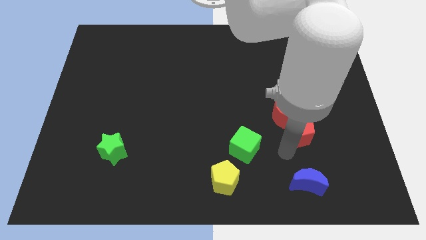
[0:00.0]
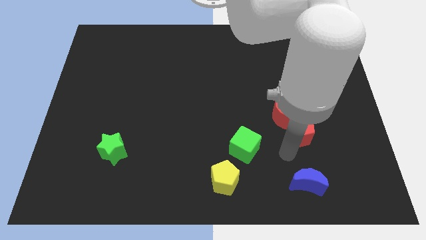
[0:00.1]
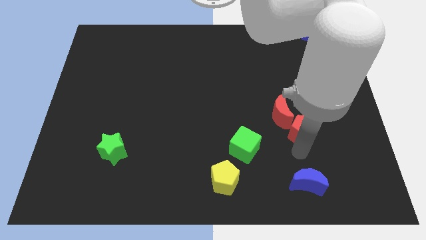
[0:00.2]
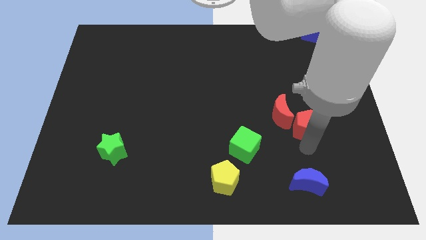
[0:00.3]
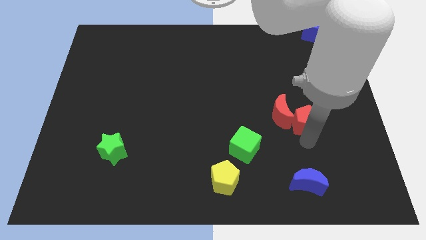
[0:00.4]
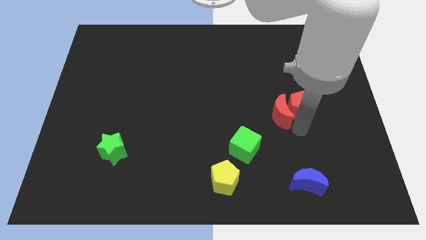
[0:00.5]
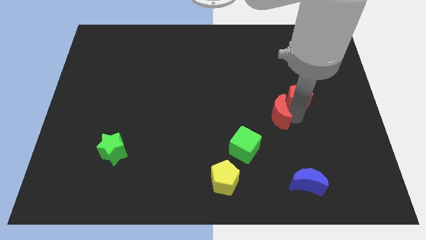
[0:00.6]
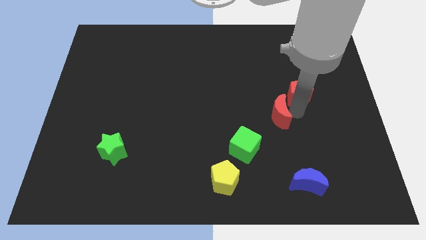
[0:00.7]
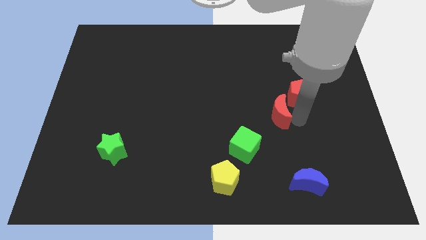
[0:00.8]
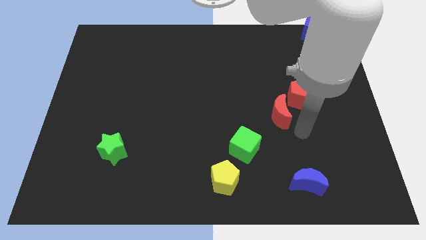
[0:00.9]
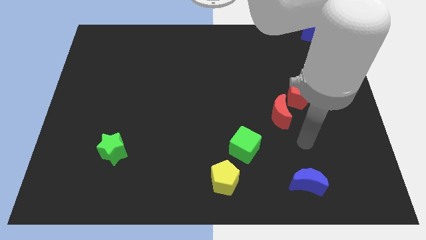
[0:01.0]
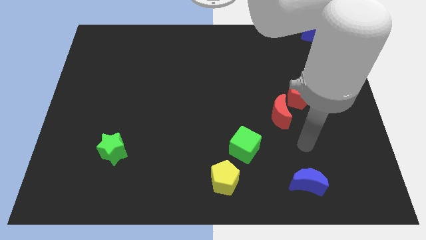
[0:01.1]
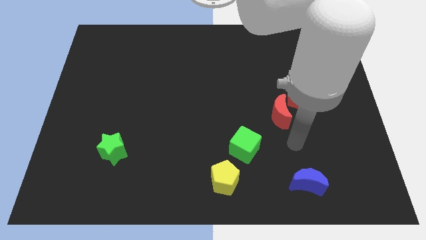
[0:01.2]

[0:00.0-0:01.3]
reposition the red pentagon

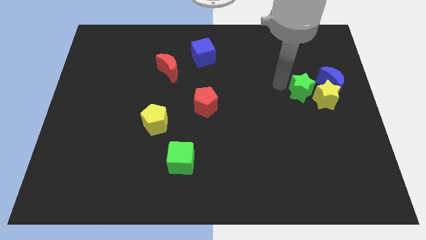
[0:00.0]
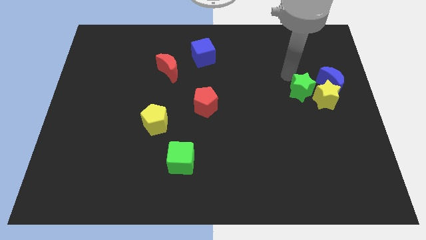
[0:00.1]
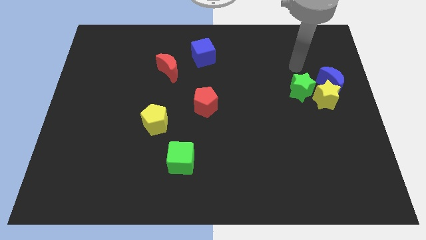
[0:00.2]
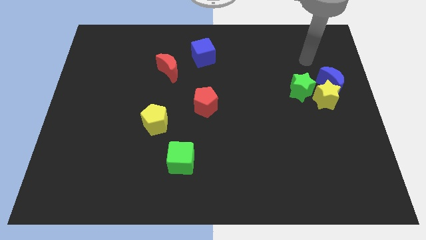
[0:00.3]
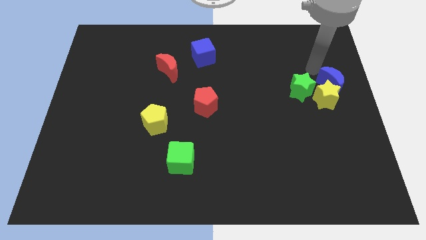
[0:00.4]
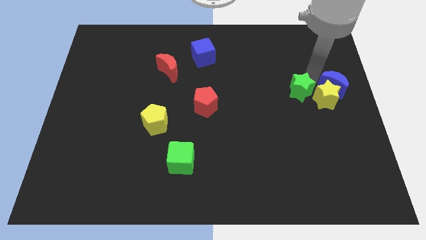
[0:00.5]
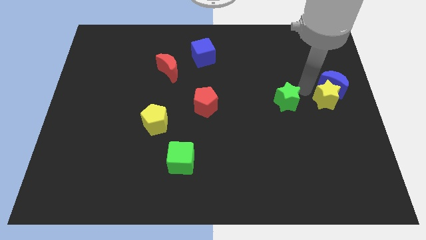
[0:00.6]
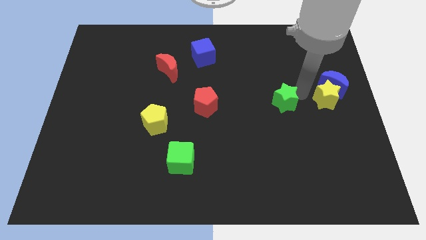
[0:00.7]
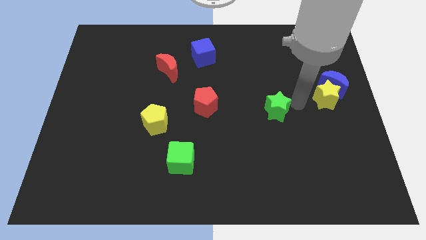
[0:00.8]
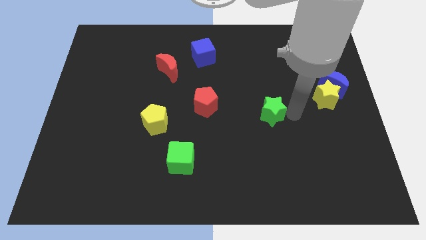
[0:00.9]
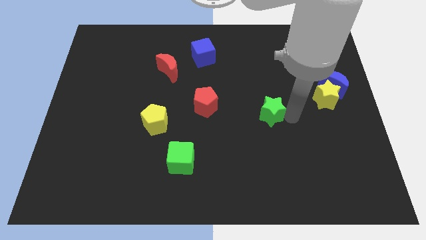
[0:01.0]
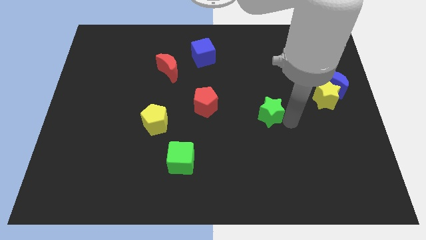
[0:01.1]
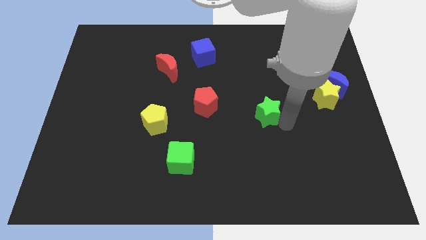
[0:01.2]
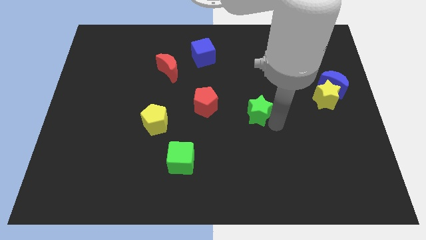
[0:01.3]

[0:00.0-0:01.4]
move the green star away from the yellow star

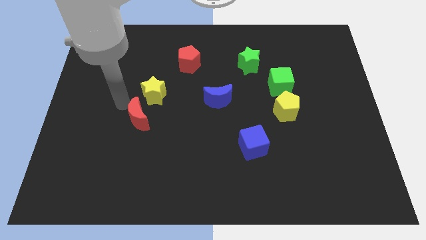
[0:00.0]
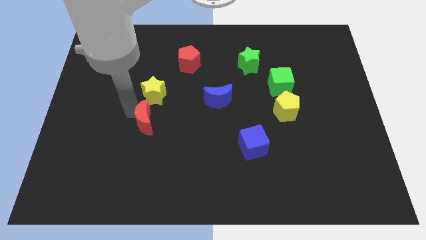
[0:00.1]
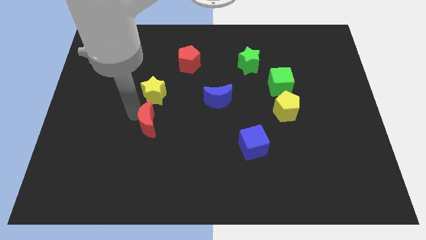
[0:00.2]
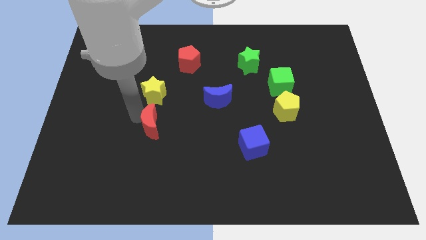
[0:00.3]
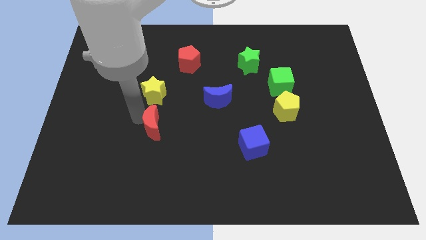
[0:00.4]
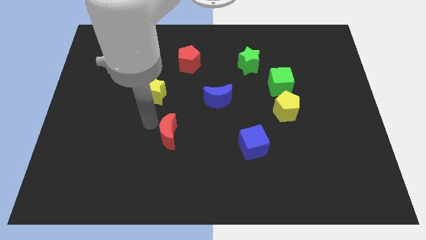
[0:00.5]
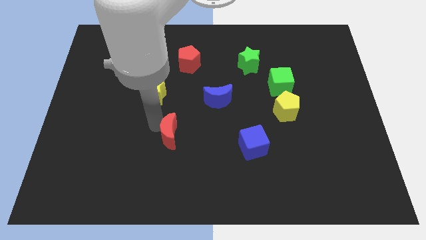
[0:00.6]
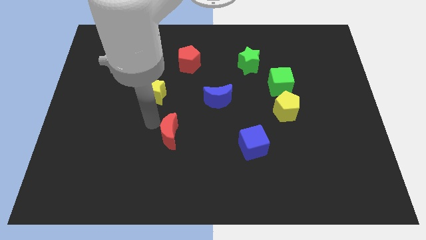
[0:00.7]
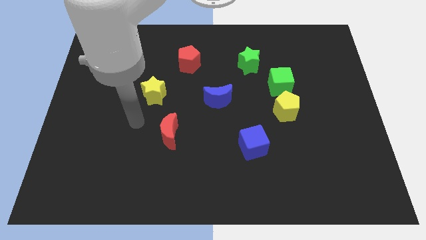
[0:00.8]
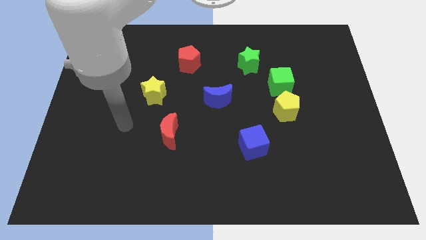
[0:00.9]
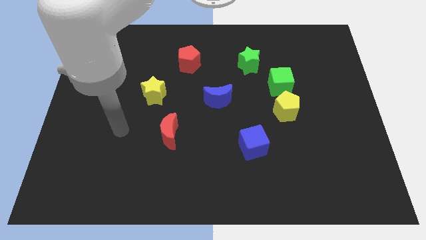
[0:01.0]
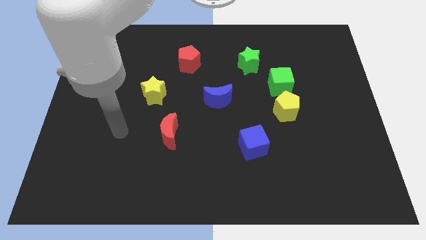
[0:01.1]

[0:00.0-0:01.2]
push red moon towards right side of the board

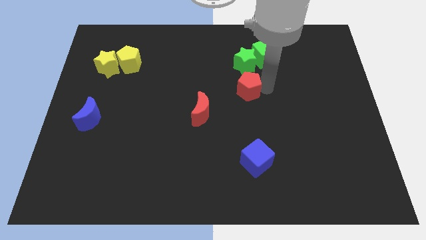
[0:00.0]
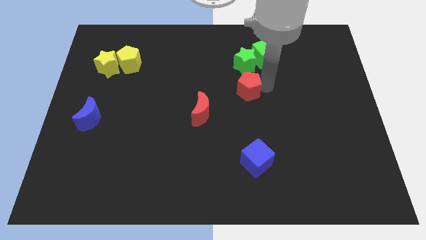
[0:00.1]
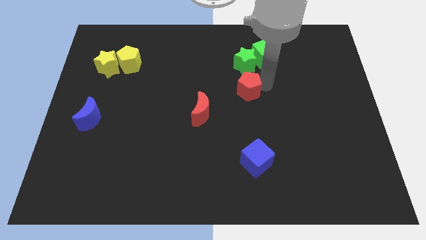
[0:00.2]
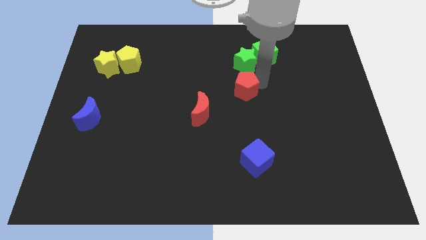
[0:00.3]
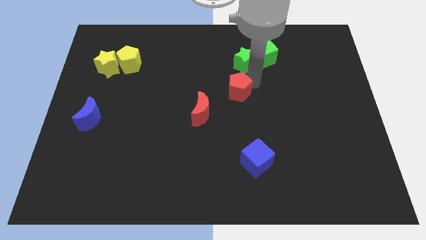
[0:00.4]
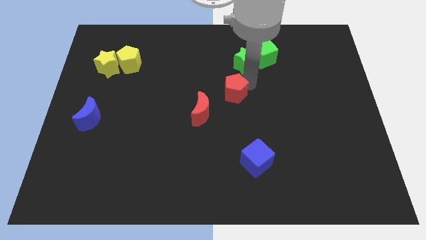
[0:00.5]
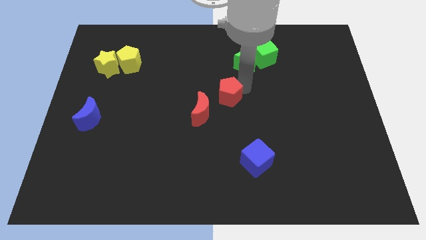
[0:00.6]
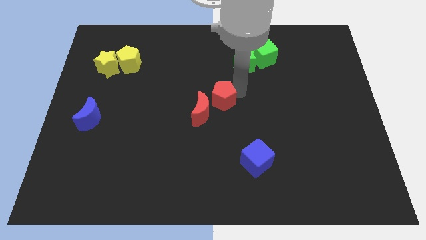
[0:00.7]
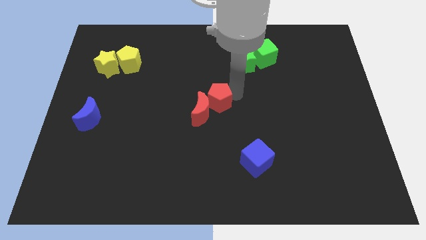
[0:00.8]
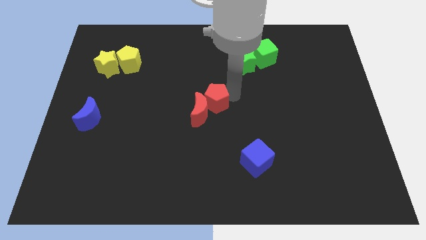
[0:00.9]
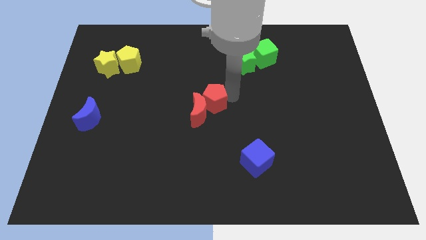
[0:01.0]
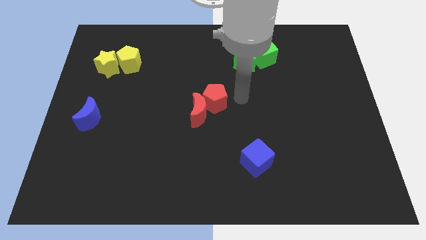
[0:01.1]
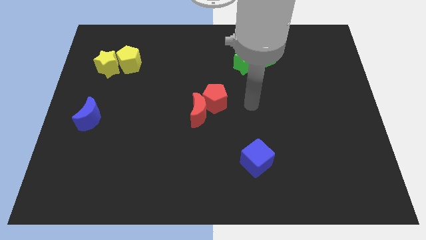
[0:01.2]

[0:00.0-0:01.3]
push red pentagon into red moon

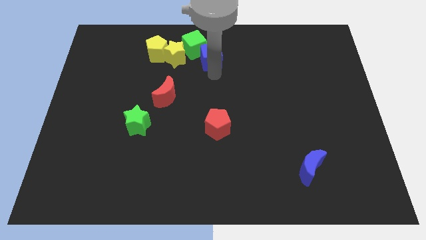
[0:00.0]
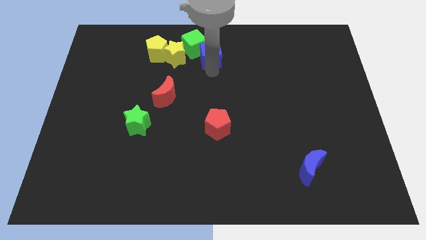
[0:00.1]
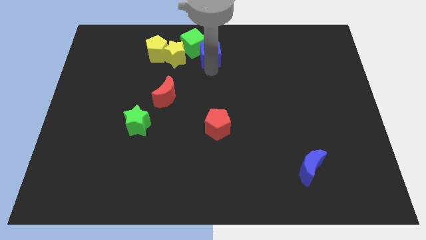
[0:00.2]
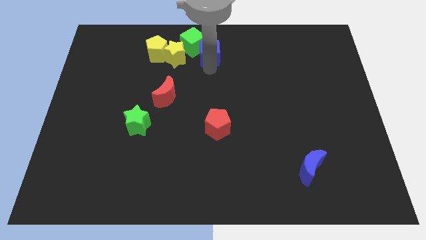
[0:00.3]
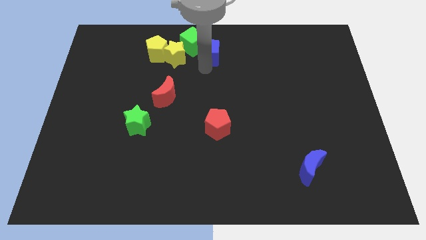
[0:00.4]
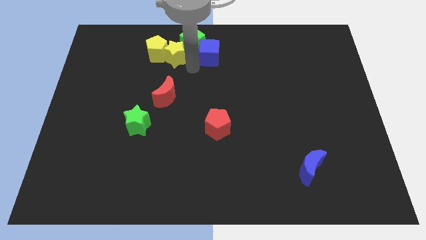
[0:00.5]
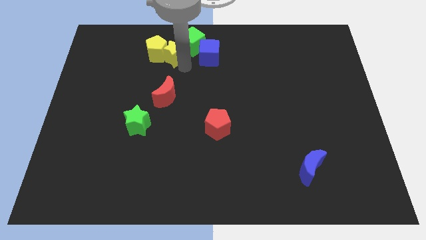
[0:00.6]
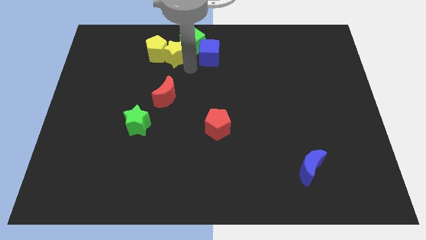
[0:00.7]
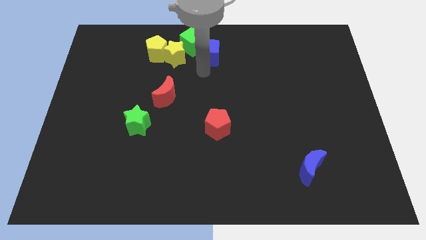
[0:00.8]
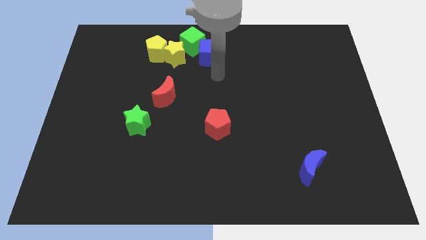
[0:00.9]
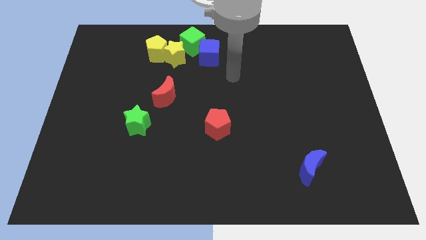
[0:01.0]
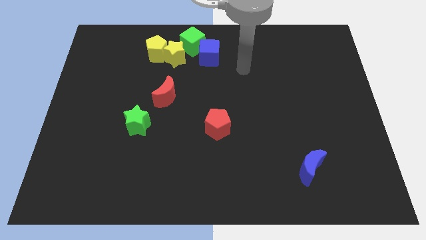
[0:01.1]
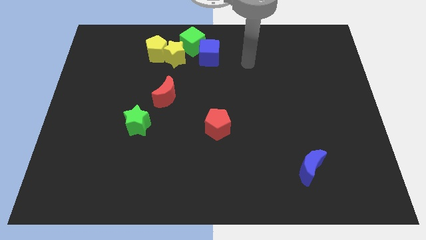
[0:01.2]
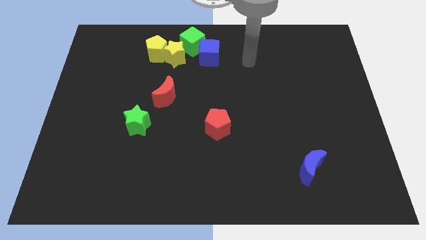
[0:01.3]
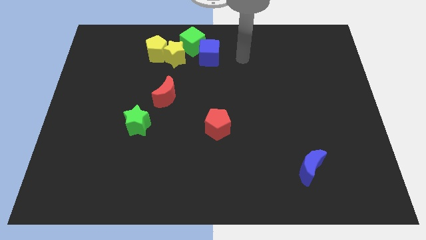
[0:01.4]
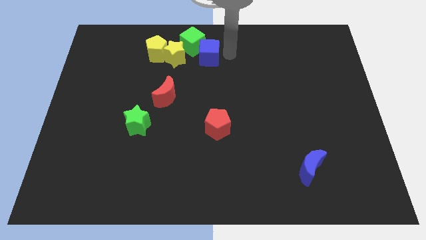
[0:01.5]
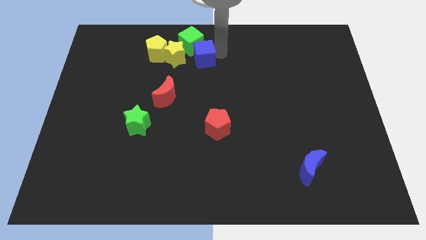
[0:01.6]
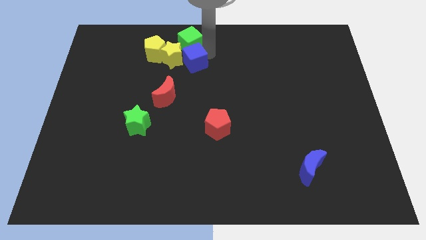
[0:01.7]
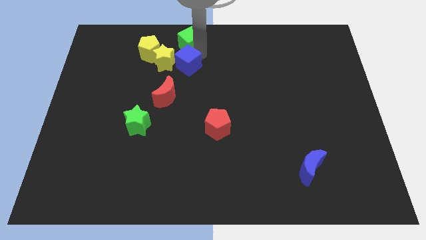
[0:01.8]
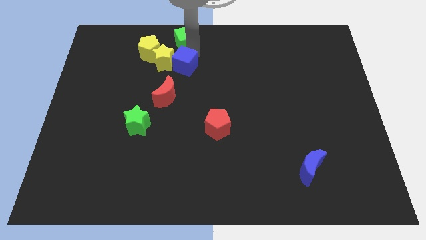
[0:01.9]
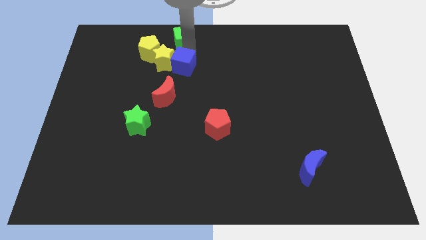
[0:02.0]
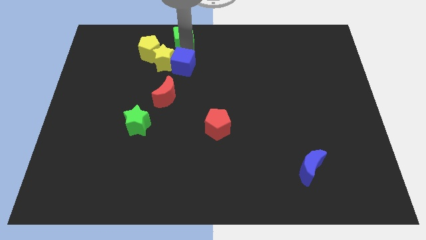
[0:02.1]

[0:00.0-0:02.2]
place your arm in between the green cube and blue cube

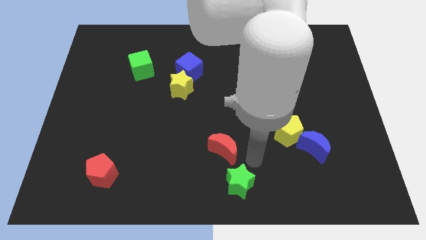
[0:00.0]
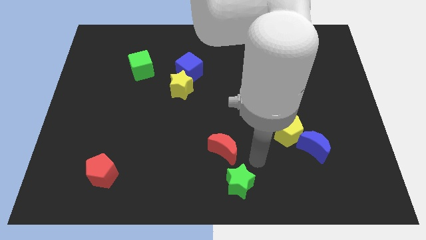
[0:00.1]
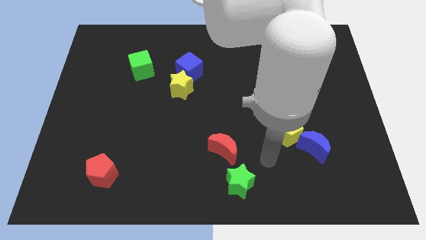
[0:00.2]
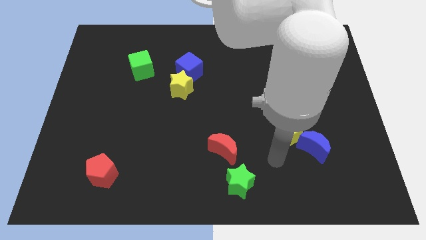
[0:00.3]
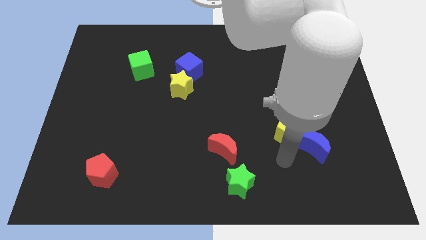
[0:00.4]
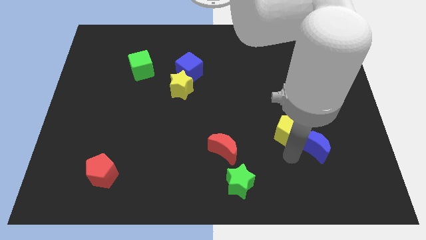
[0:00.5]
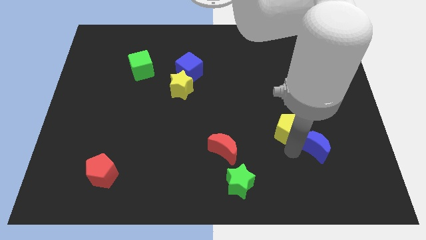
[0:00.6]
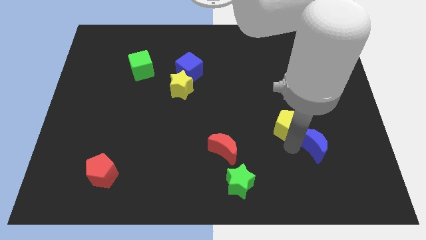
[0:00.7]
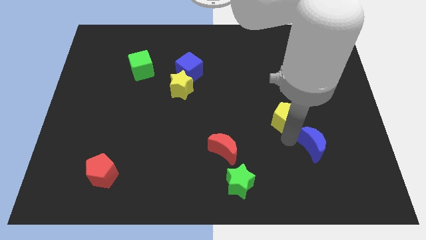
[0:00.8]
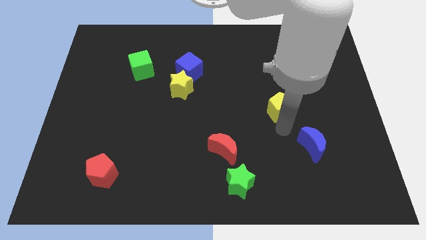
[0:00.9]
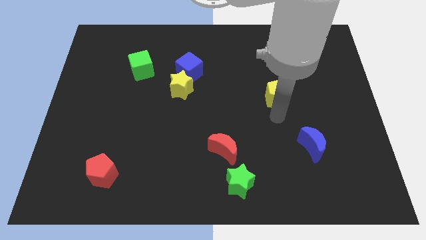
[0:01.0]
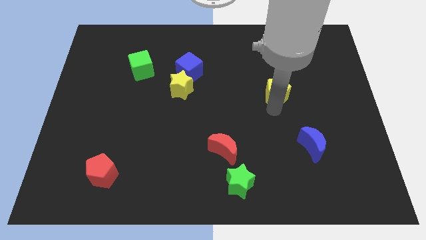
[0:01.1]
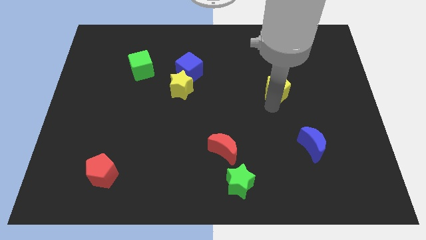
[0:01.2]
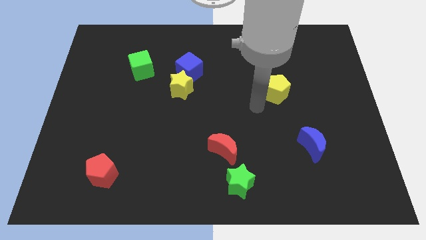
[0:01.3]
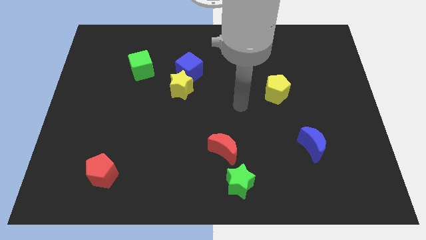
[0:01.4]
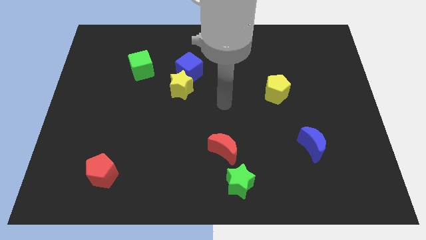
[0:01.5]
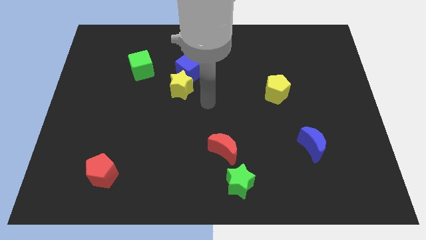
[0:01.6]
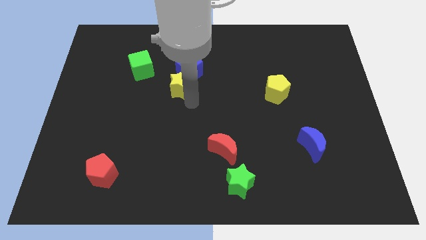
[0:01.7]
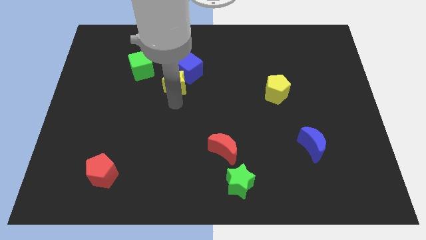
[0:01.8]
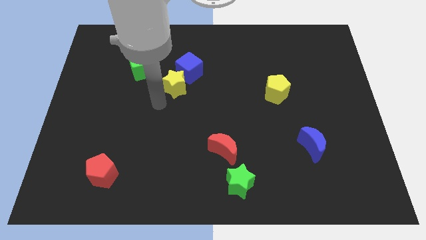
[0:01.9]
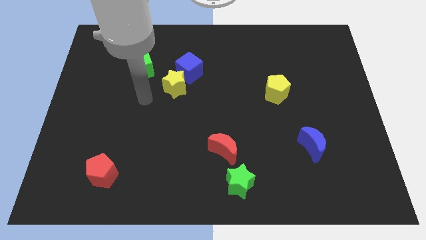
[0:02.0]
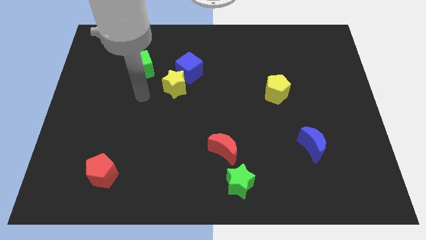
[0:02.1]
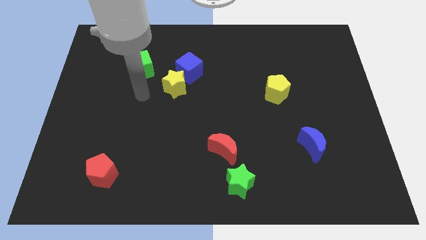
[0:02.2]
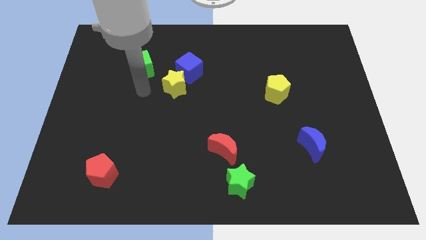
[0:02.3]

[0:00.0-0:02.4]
move the yellow pentagon towards top
